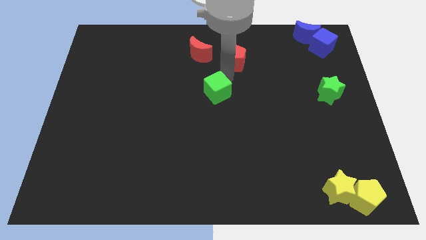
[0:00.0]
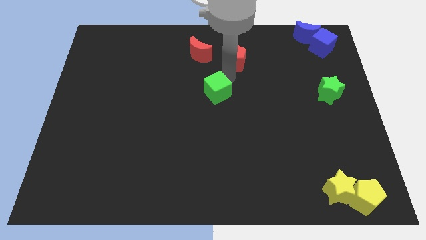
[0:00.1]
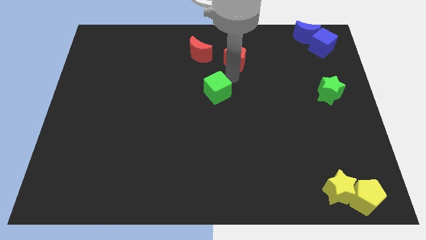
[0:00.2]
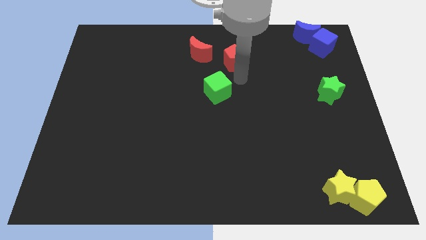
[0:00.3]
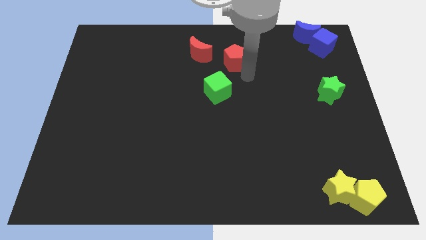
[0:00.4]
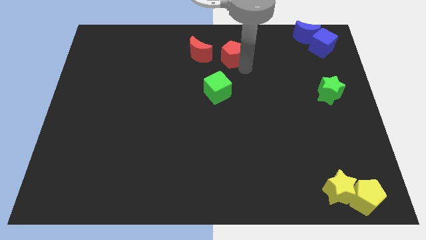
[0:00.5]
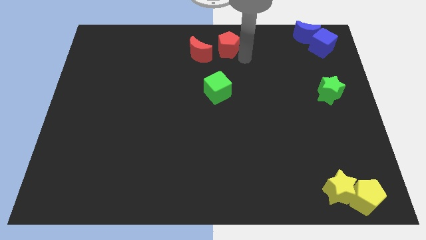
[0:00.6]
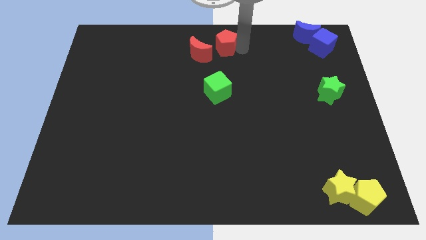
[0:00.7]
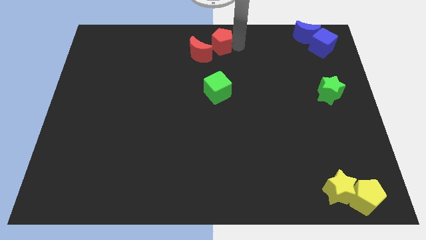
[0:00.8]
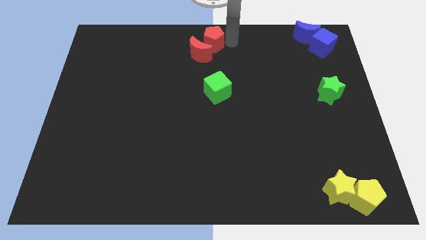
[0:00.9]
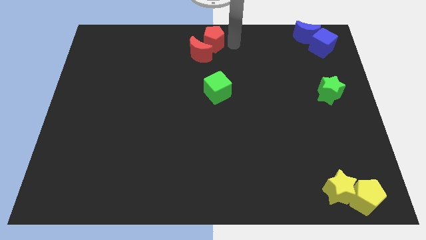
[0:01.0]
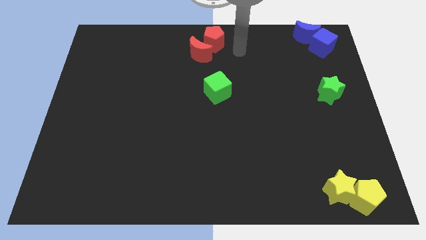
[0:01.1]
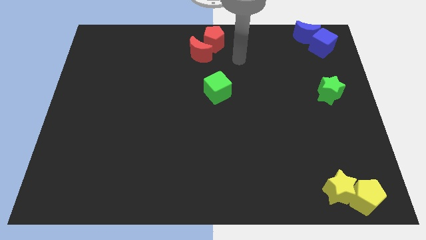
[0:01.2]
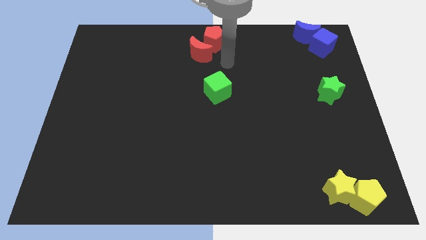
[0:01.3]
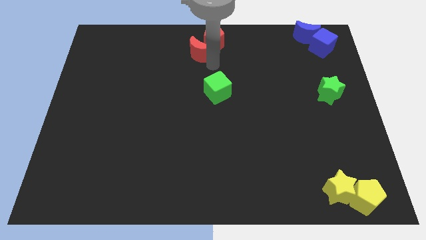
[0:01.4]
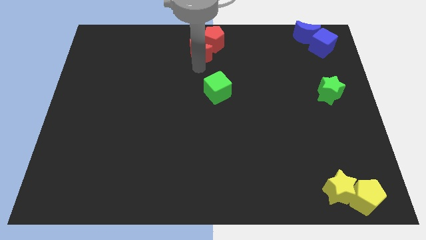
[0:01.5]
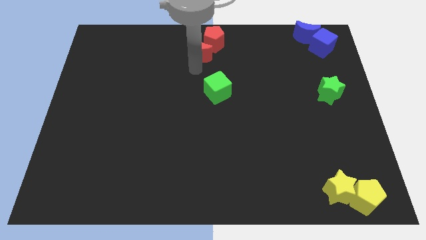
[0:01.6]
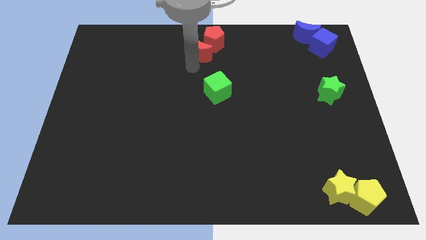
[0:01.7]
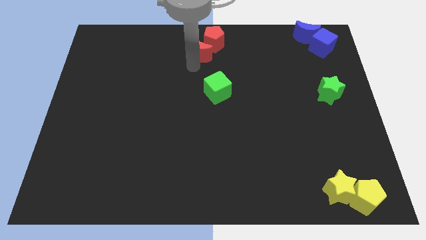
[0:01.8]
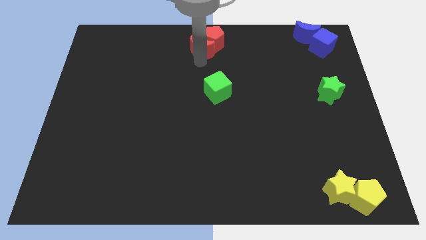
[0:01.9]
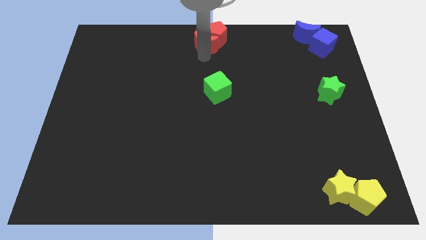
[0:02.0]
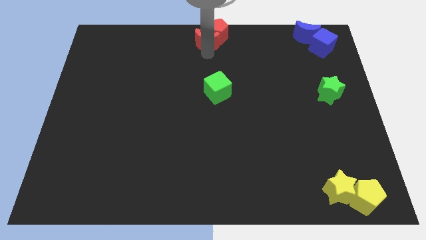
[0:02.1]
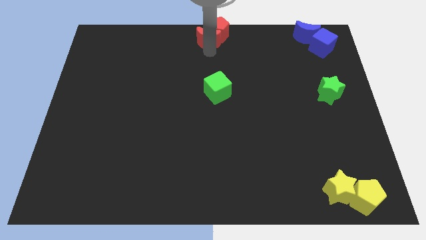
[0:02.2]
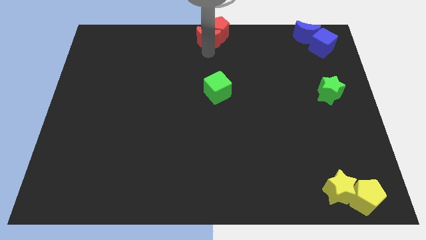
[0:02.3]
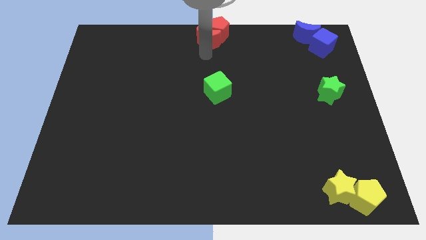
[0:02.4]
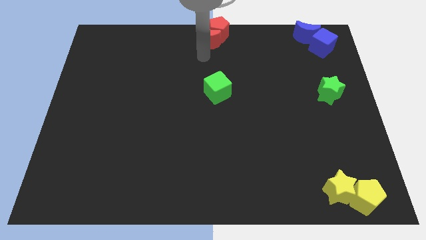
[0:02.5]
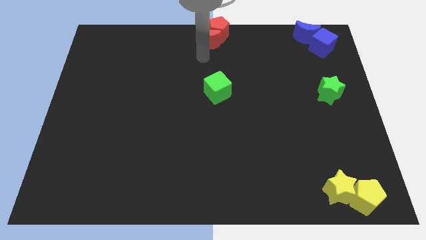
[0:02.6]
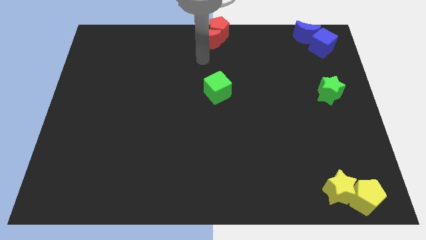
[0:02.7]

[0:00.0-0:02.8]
push the red blocks towards top center

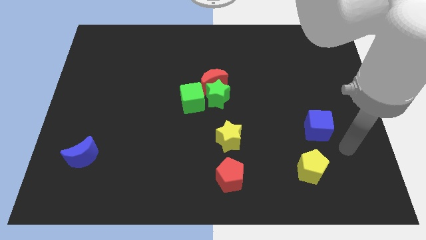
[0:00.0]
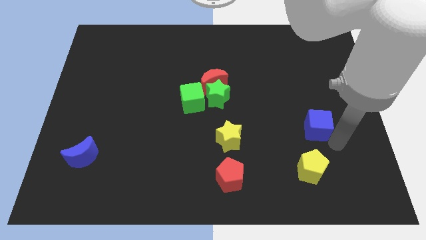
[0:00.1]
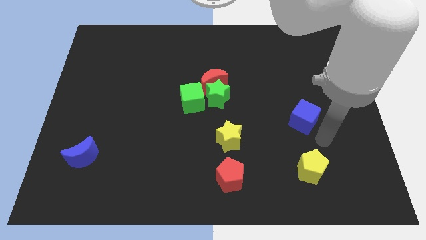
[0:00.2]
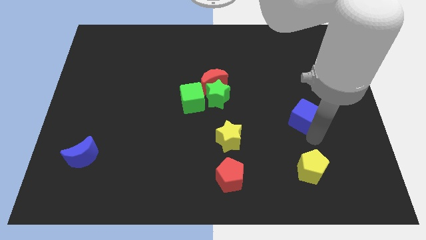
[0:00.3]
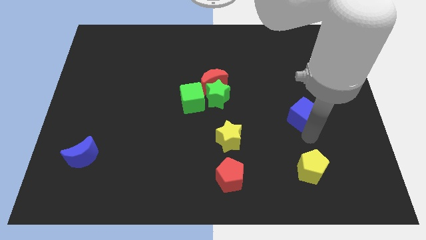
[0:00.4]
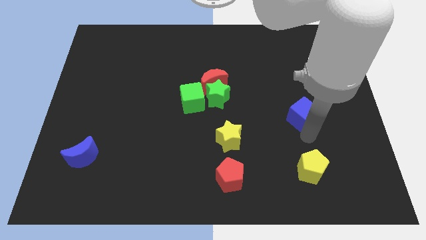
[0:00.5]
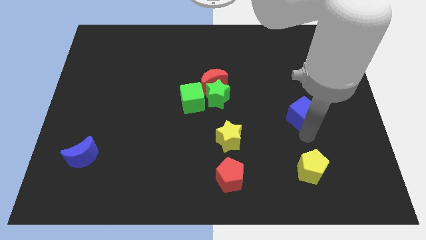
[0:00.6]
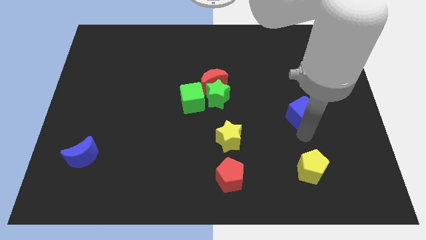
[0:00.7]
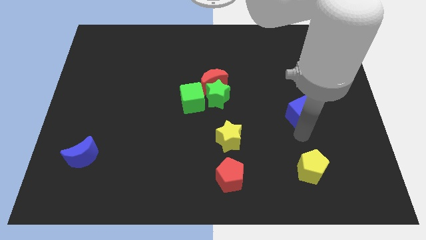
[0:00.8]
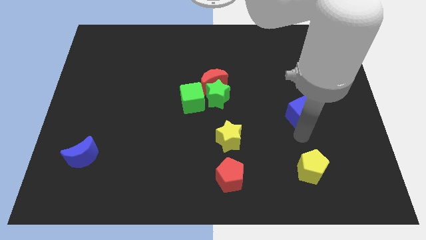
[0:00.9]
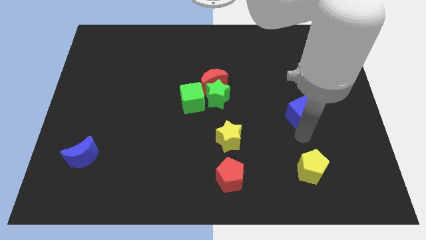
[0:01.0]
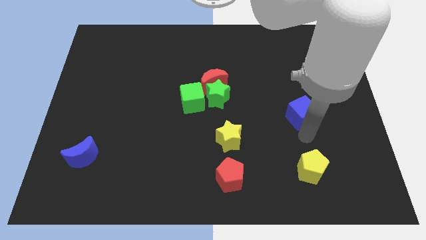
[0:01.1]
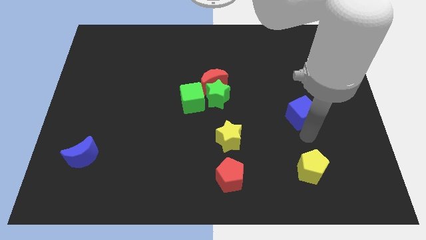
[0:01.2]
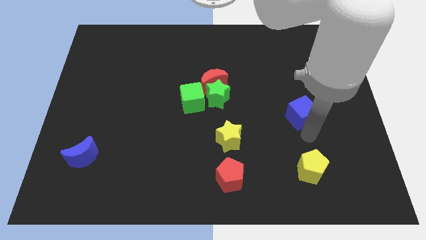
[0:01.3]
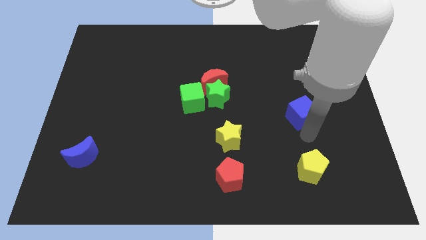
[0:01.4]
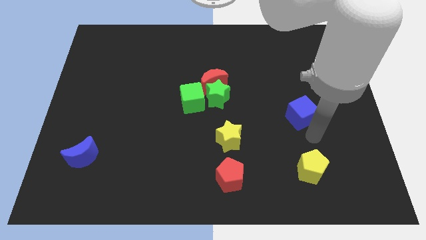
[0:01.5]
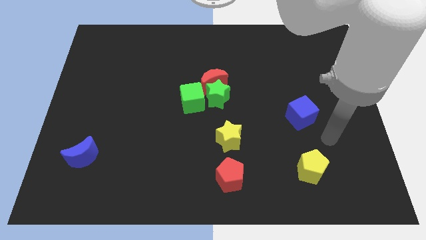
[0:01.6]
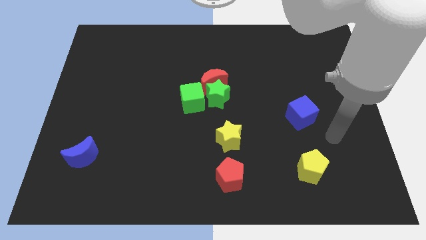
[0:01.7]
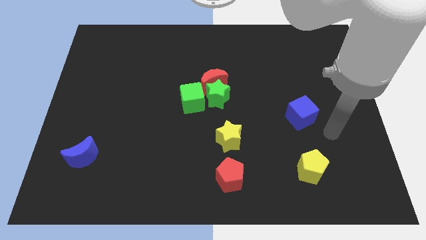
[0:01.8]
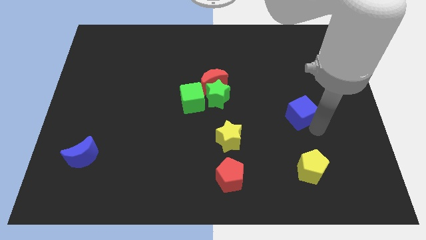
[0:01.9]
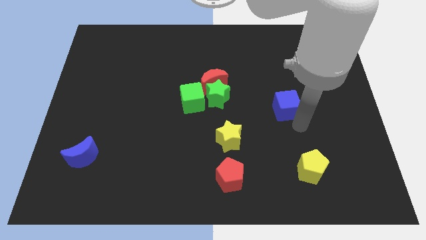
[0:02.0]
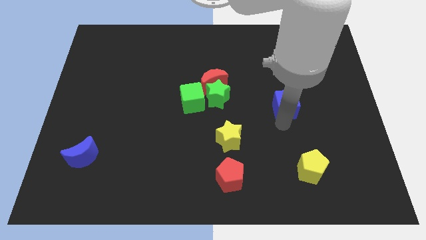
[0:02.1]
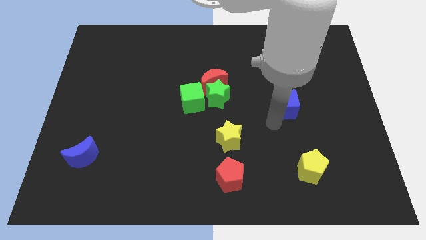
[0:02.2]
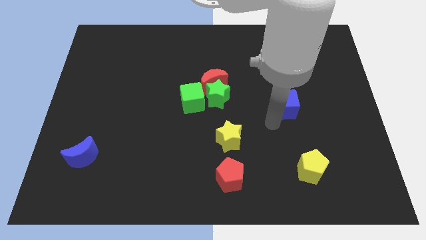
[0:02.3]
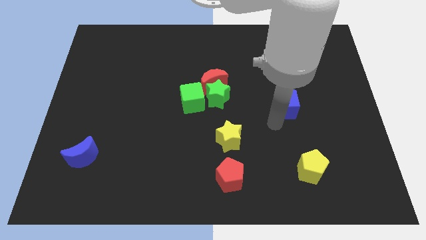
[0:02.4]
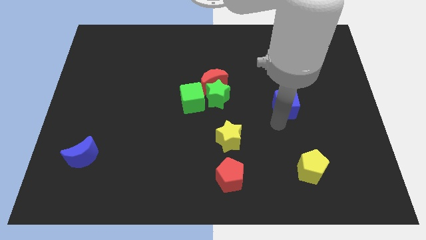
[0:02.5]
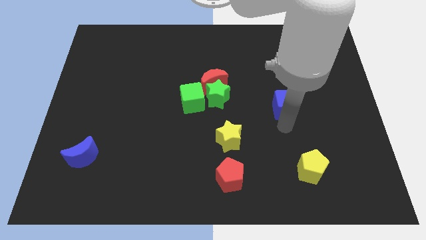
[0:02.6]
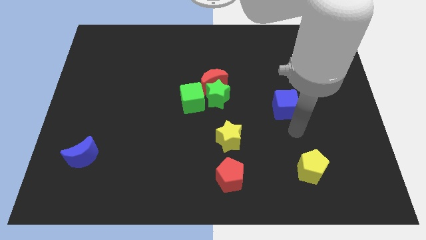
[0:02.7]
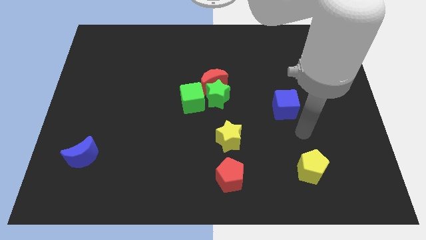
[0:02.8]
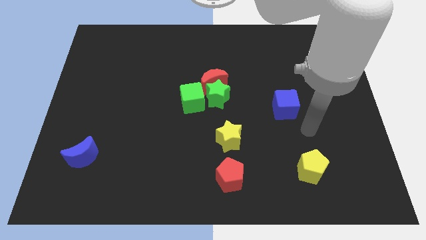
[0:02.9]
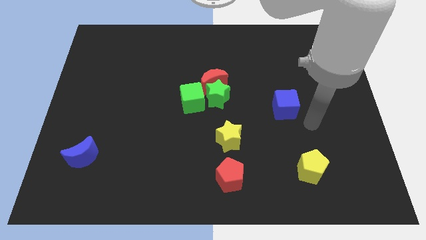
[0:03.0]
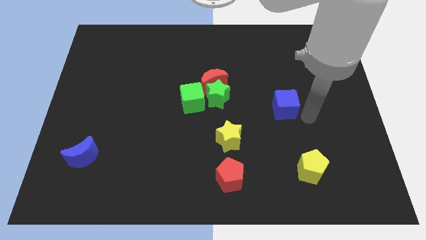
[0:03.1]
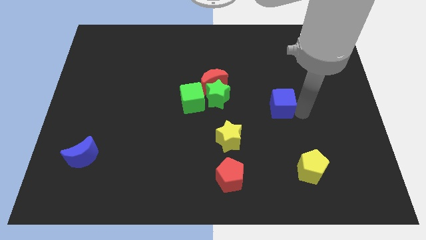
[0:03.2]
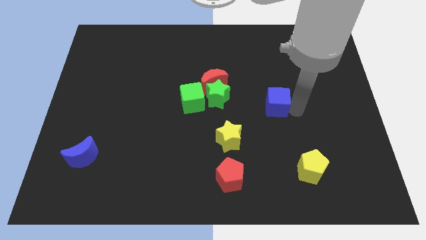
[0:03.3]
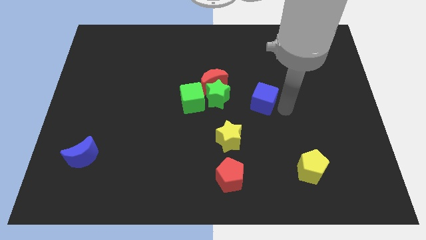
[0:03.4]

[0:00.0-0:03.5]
place the blue cube diagonally top right to the yellow star

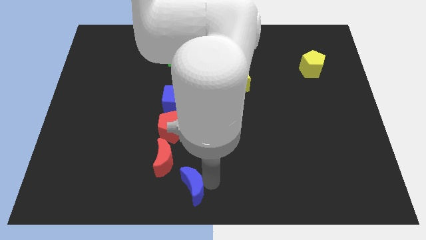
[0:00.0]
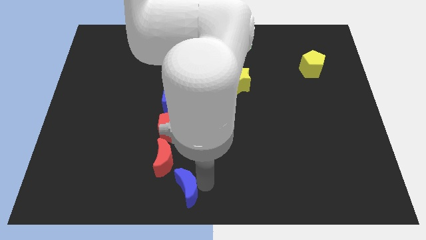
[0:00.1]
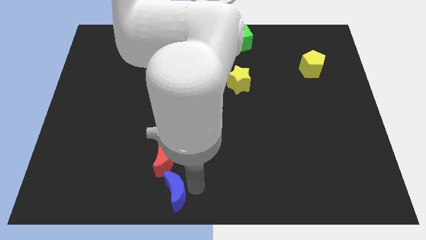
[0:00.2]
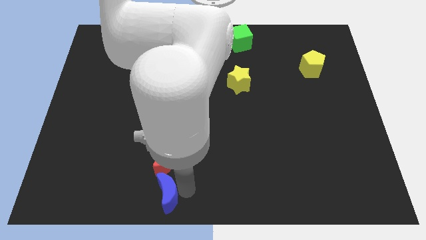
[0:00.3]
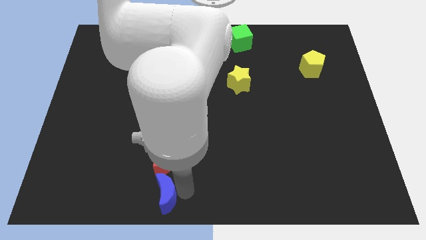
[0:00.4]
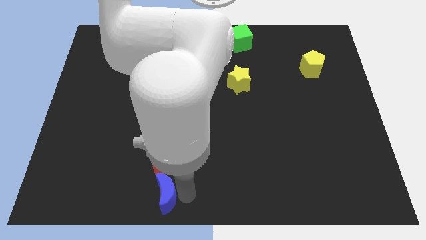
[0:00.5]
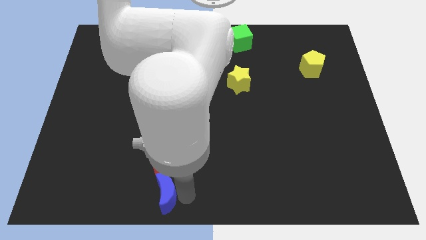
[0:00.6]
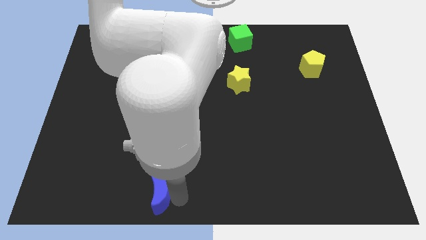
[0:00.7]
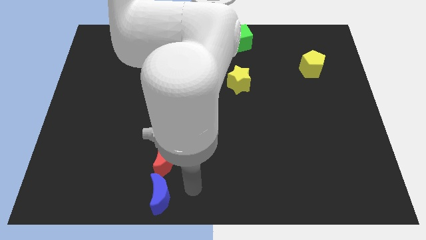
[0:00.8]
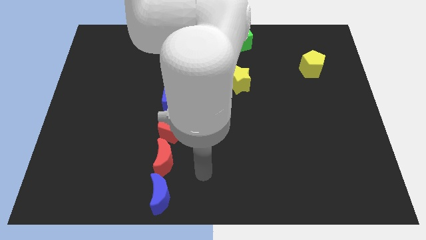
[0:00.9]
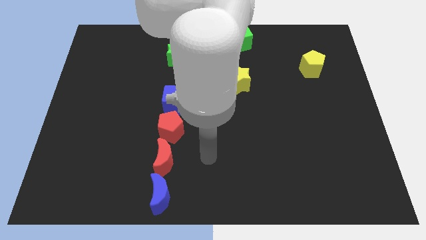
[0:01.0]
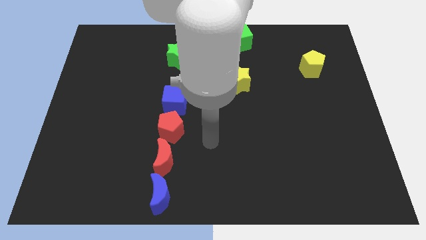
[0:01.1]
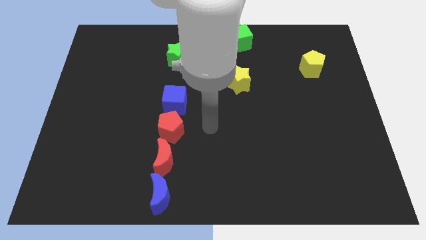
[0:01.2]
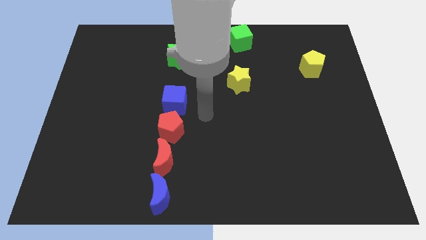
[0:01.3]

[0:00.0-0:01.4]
push the blue moon and move your arm upwards

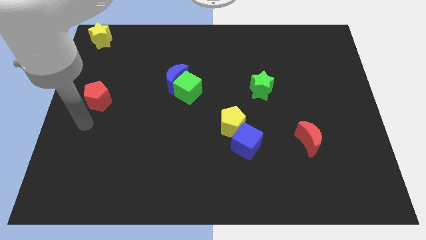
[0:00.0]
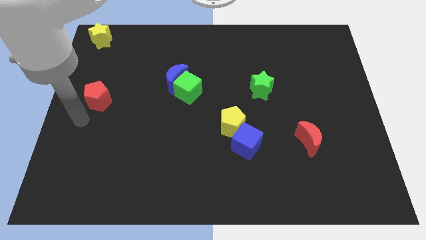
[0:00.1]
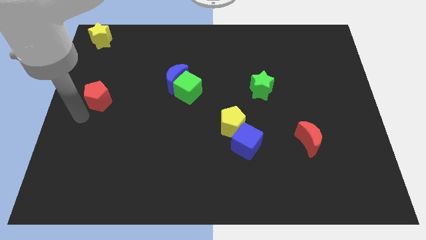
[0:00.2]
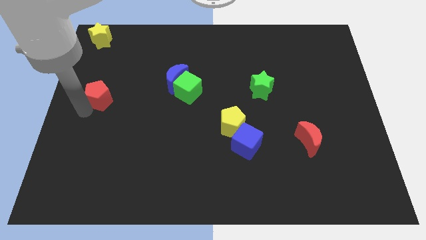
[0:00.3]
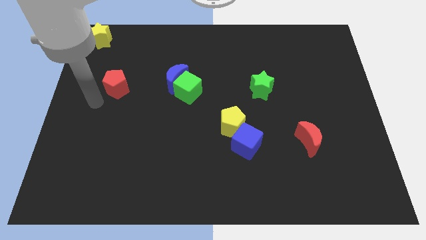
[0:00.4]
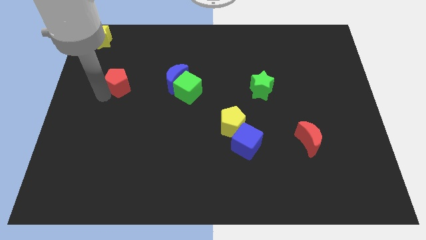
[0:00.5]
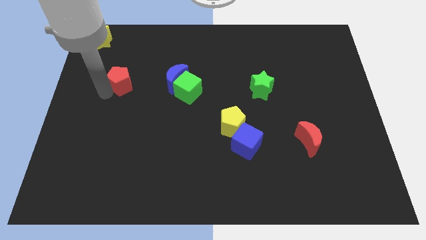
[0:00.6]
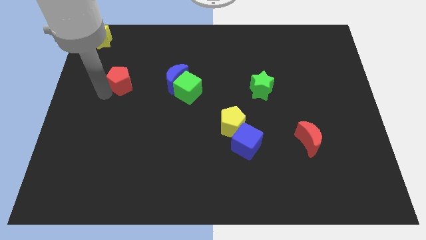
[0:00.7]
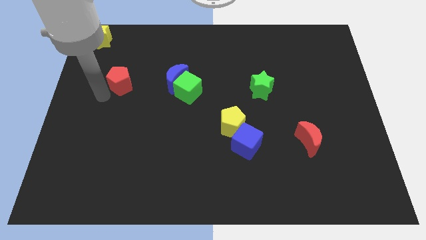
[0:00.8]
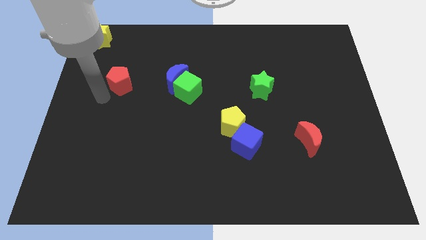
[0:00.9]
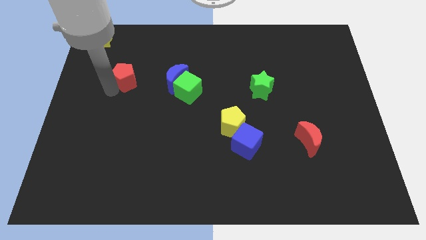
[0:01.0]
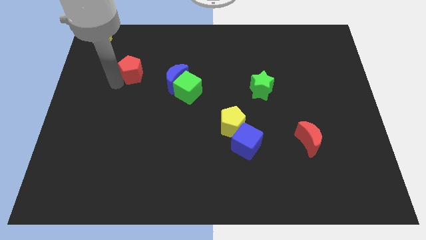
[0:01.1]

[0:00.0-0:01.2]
place the red pentagon to the left of blue moon
